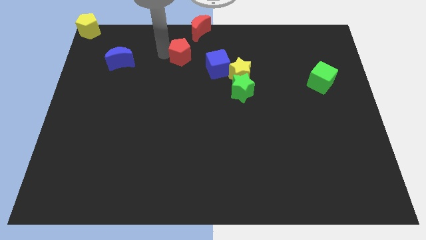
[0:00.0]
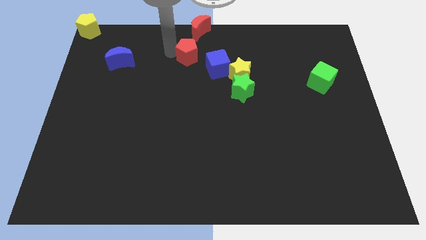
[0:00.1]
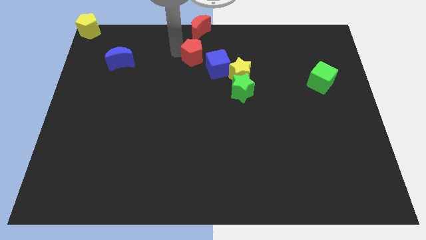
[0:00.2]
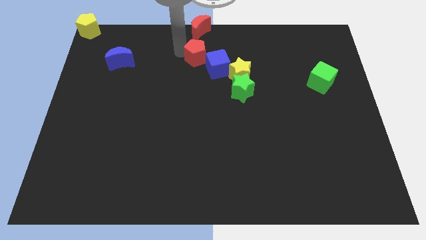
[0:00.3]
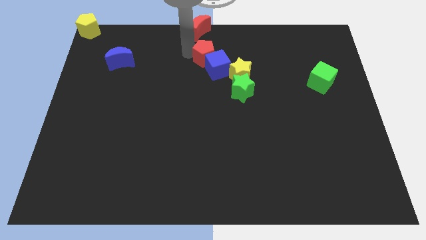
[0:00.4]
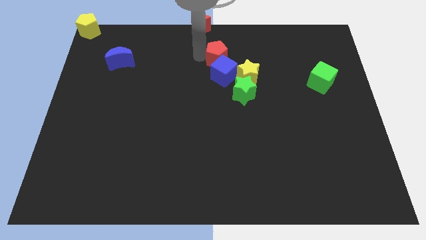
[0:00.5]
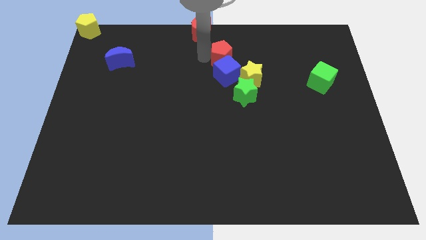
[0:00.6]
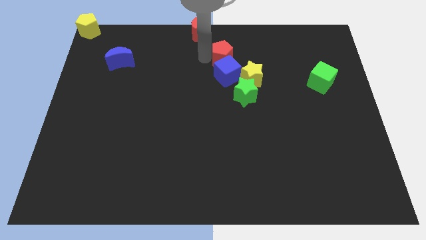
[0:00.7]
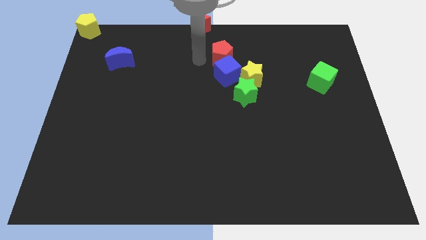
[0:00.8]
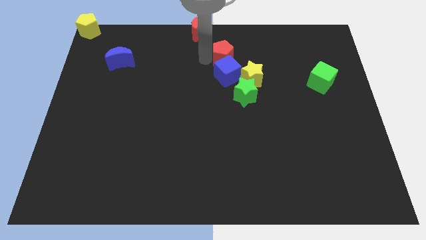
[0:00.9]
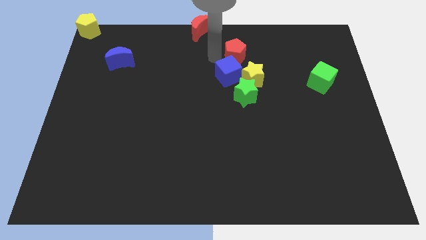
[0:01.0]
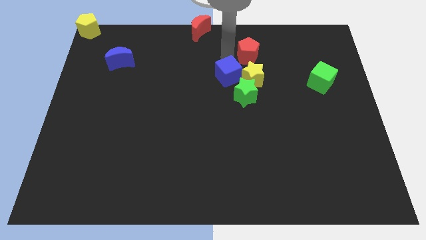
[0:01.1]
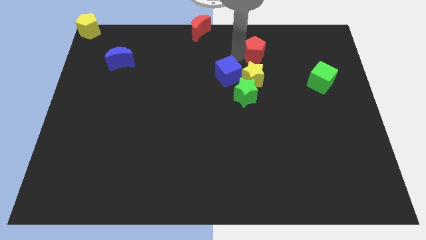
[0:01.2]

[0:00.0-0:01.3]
place red pentagon to the top of yellow star

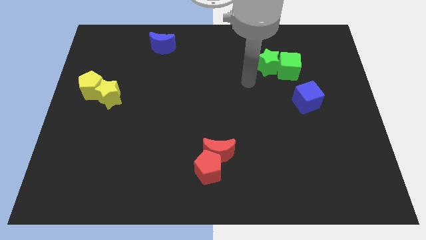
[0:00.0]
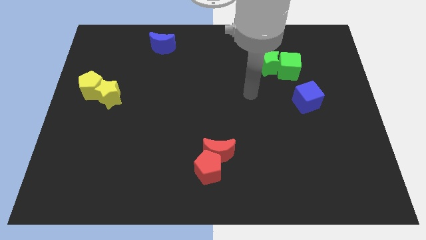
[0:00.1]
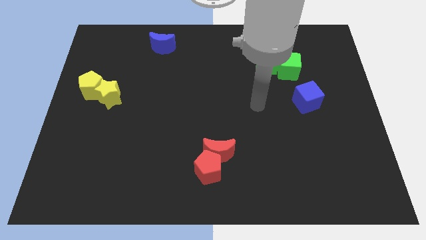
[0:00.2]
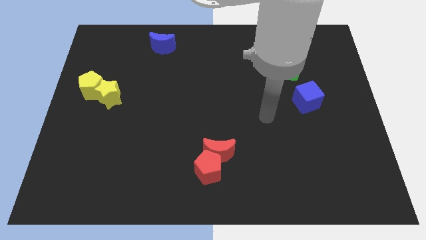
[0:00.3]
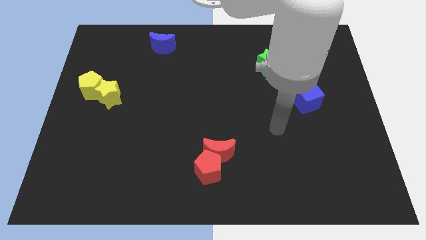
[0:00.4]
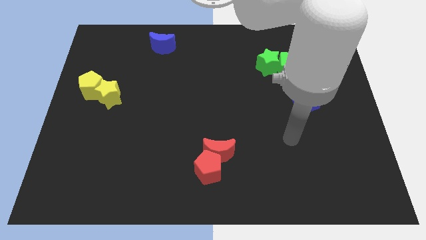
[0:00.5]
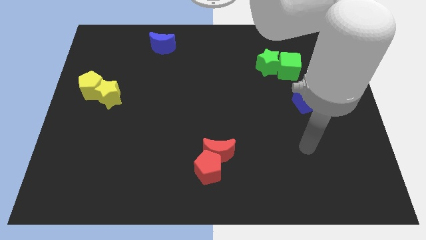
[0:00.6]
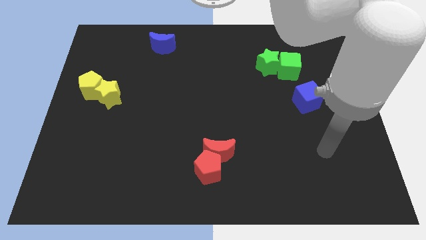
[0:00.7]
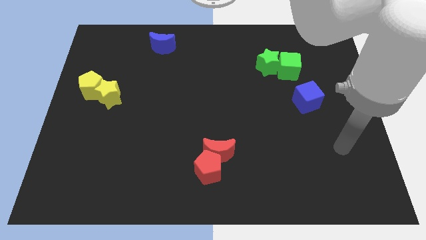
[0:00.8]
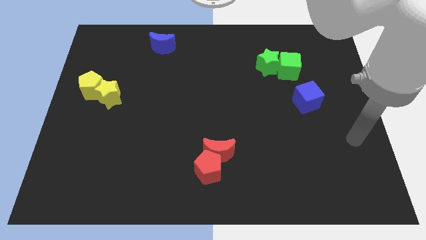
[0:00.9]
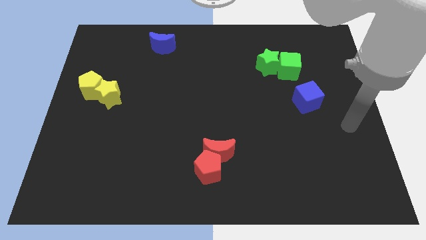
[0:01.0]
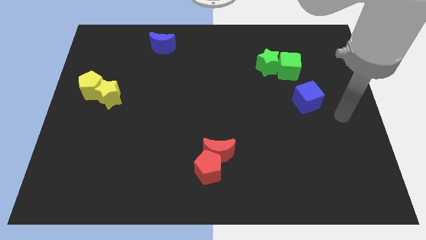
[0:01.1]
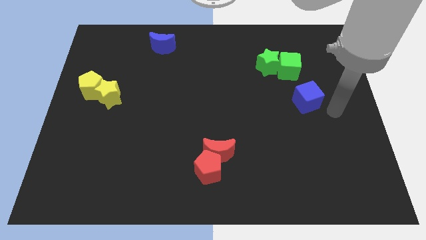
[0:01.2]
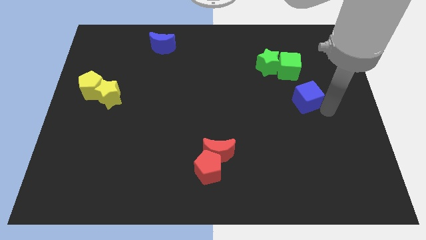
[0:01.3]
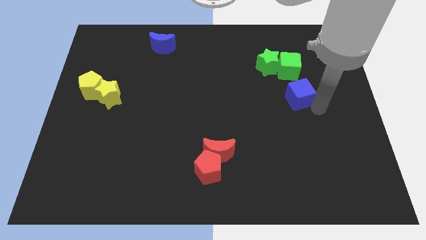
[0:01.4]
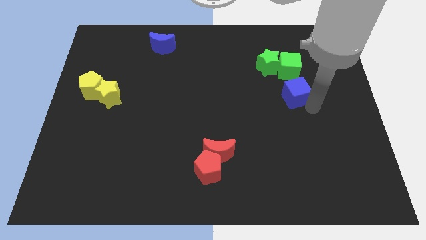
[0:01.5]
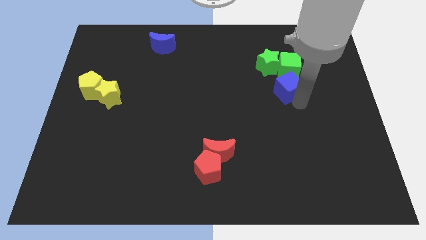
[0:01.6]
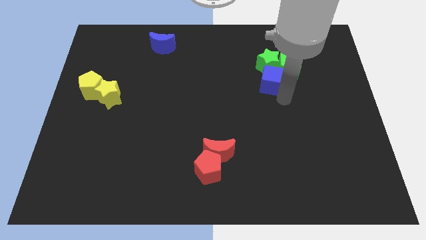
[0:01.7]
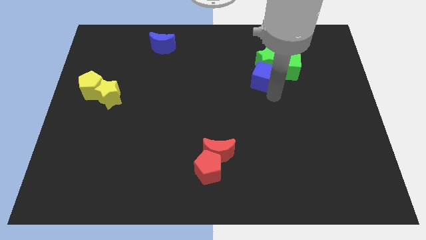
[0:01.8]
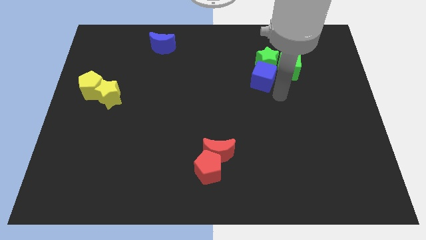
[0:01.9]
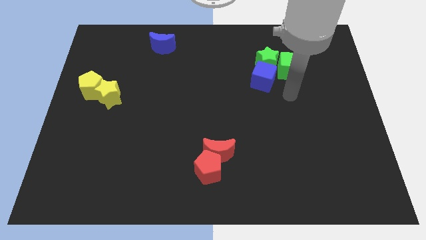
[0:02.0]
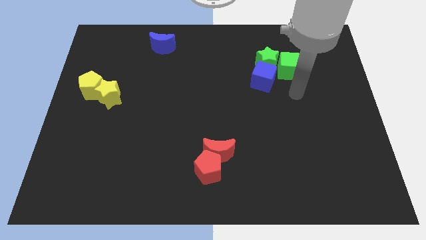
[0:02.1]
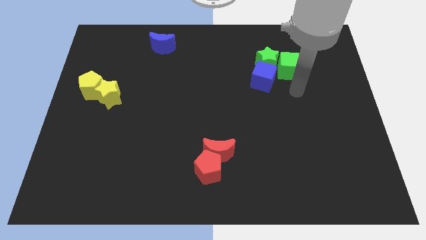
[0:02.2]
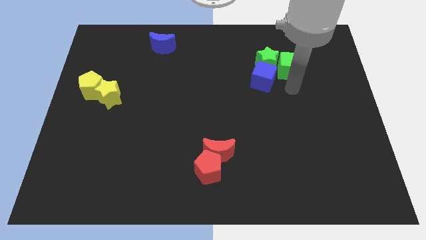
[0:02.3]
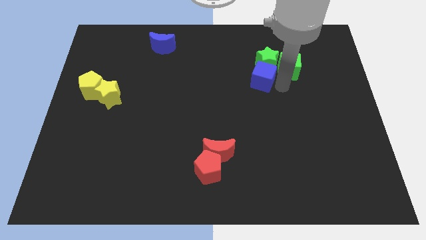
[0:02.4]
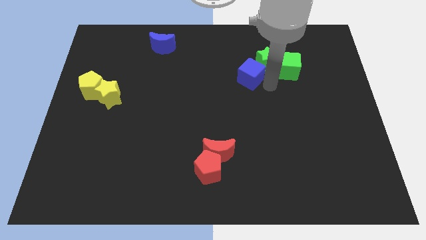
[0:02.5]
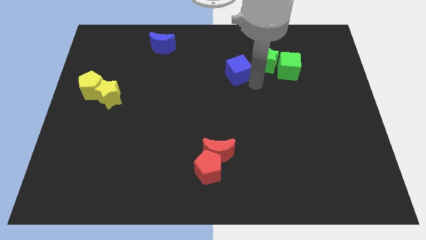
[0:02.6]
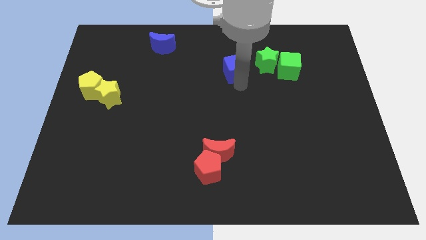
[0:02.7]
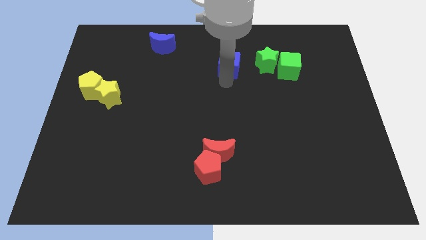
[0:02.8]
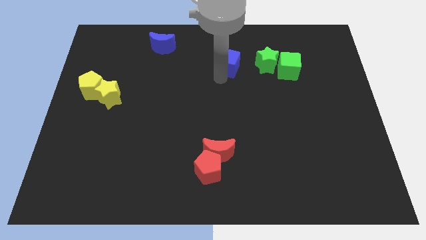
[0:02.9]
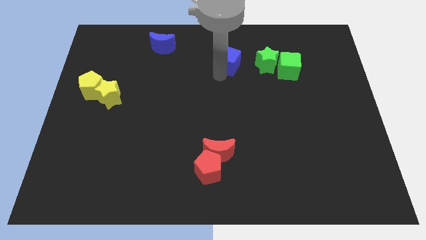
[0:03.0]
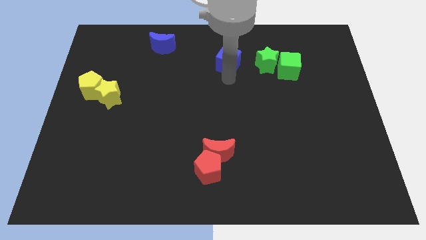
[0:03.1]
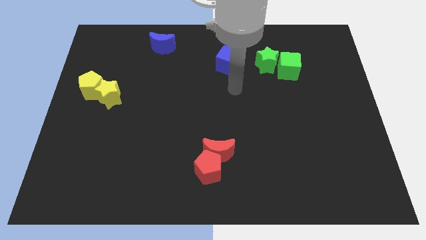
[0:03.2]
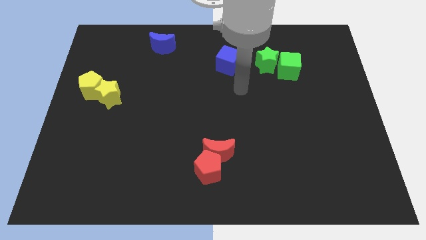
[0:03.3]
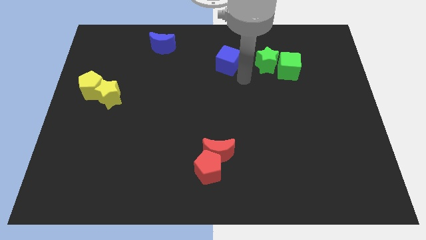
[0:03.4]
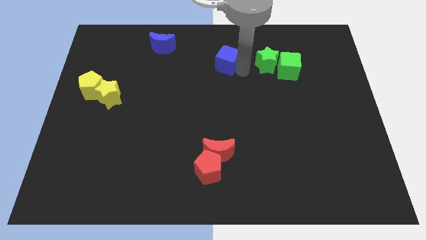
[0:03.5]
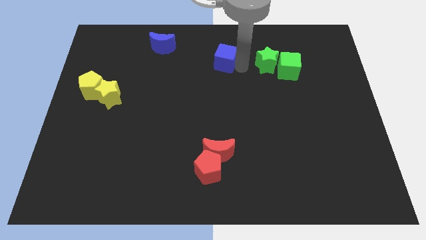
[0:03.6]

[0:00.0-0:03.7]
put the blue cube to the left of the green star

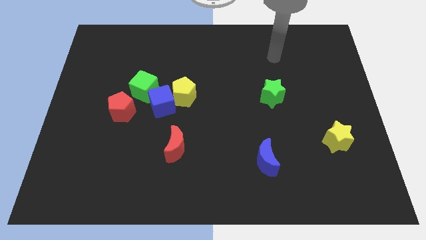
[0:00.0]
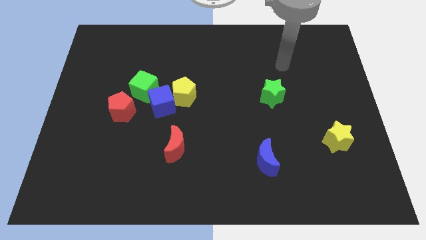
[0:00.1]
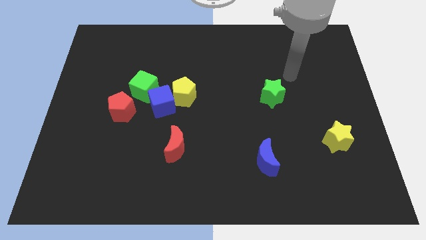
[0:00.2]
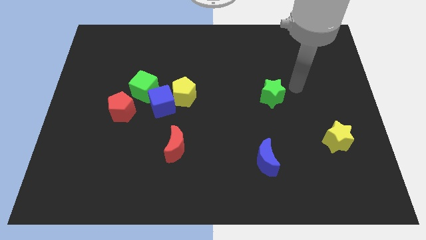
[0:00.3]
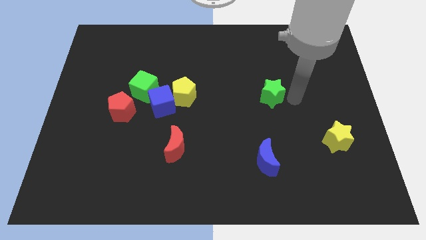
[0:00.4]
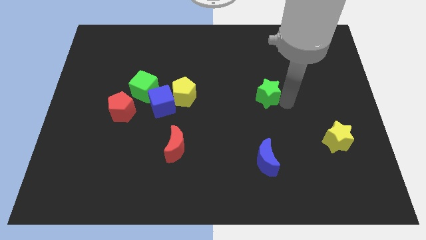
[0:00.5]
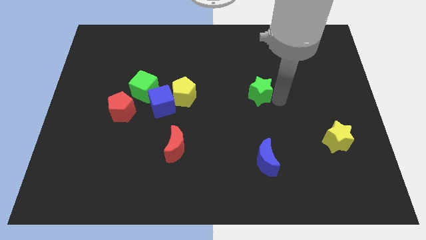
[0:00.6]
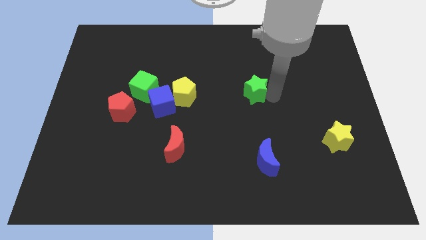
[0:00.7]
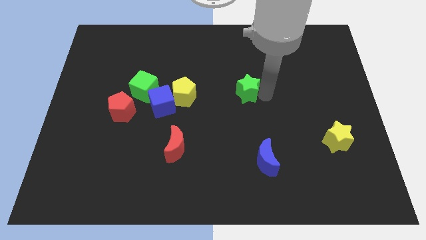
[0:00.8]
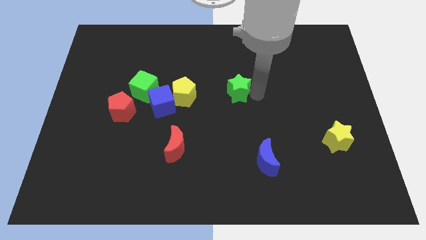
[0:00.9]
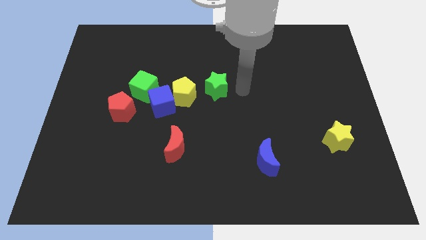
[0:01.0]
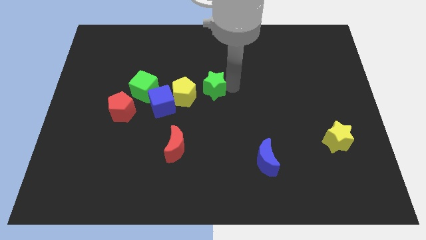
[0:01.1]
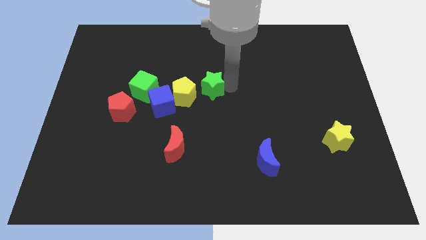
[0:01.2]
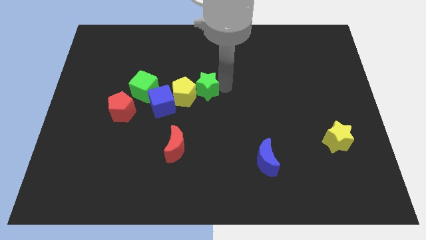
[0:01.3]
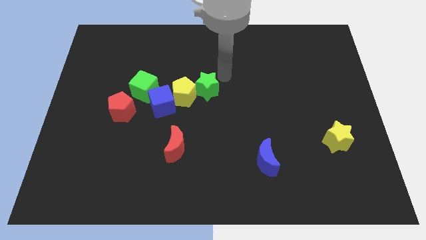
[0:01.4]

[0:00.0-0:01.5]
place the green star towards right side of the yellow pentagon

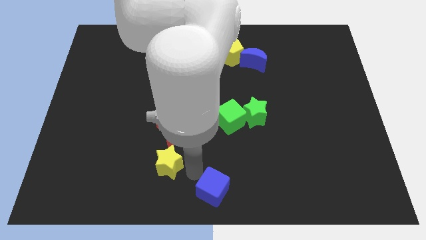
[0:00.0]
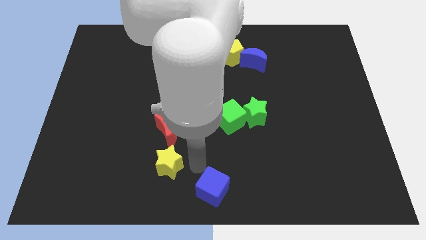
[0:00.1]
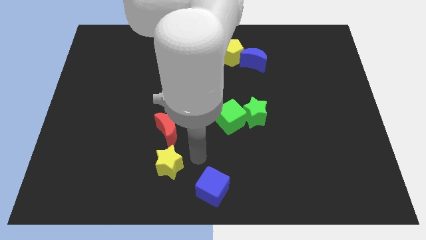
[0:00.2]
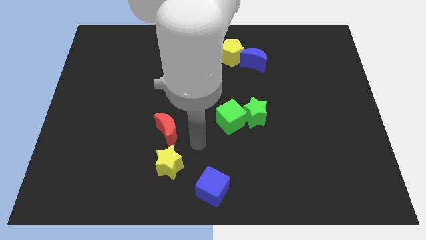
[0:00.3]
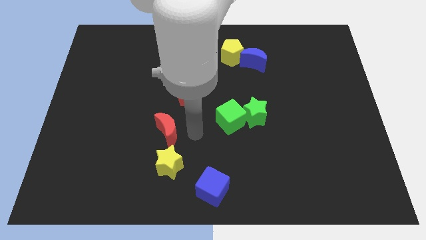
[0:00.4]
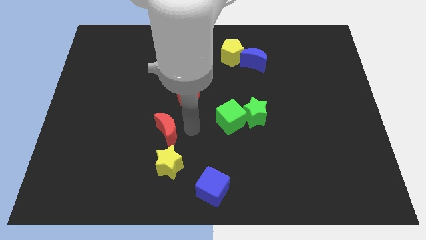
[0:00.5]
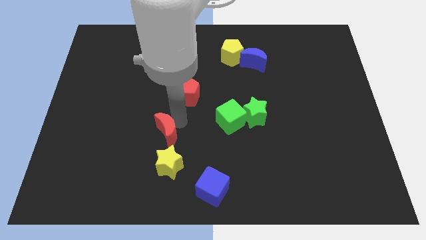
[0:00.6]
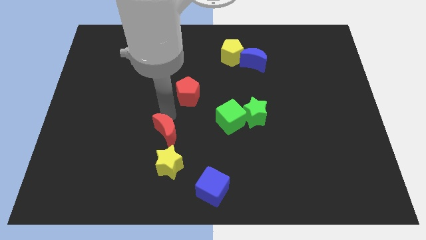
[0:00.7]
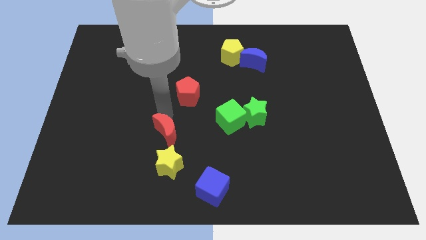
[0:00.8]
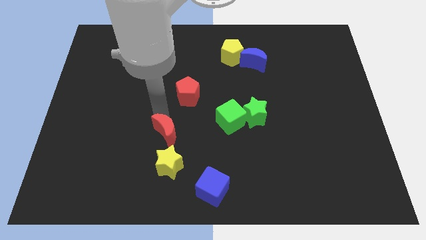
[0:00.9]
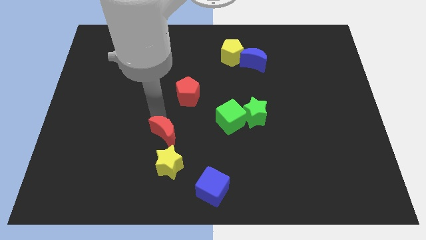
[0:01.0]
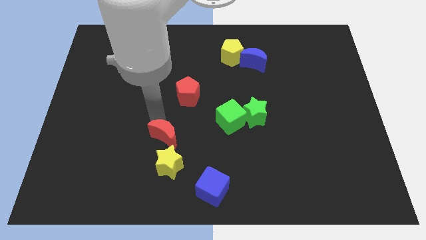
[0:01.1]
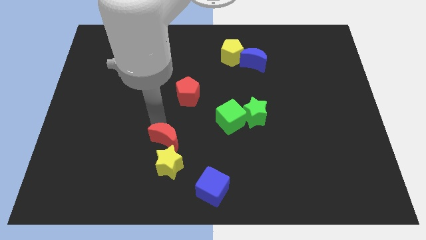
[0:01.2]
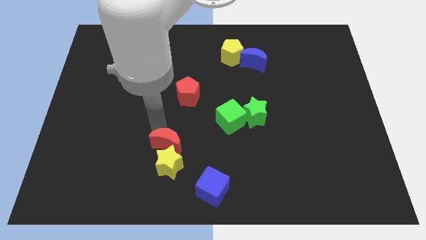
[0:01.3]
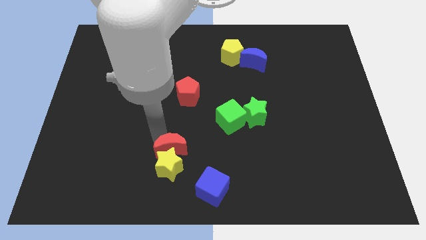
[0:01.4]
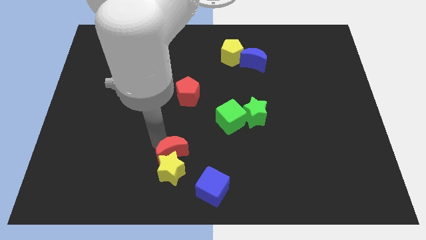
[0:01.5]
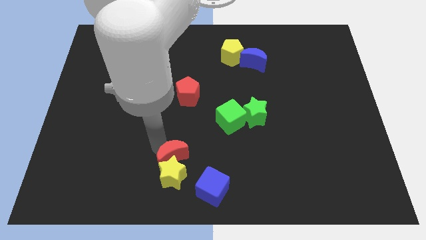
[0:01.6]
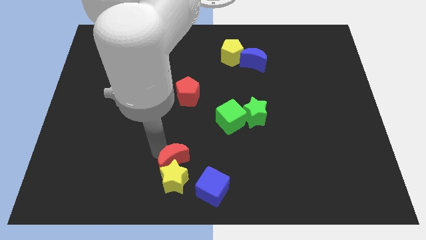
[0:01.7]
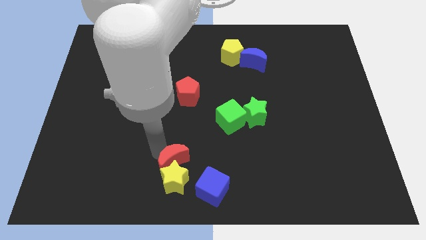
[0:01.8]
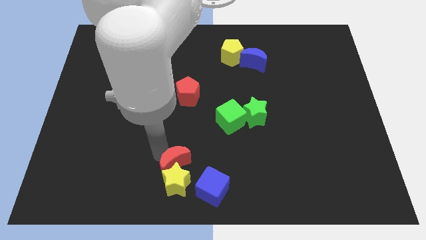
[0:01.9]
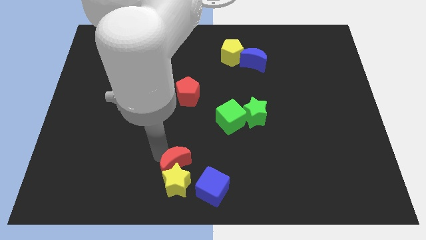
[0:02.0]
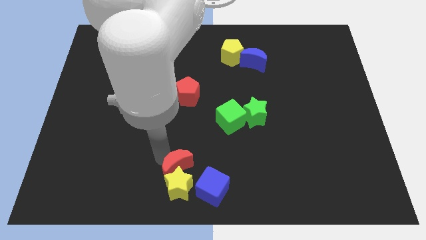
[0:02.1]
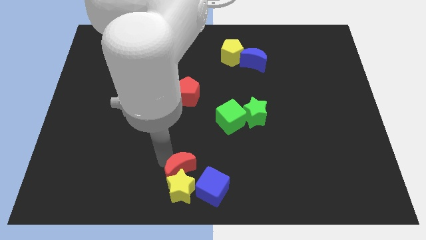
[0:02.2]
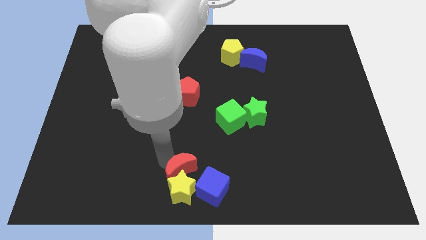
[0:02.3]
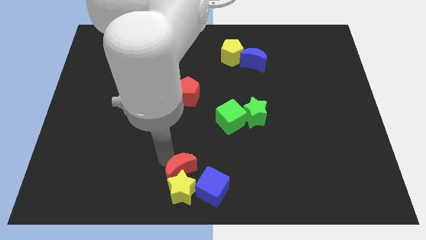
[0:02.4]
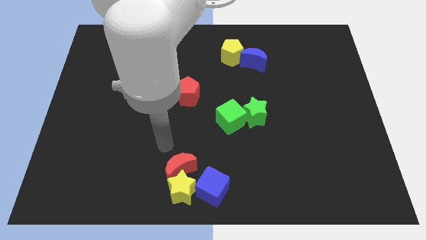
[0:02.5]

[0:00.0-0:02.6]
push the red moon into yellow star and push towards blue cube
